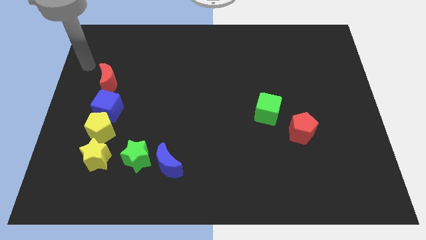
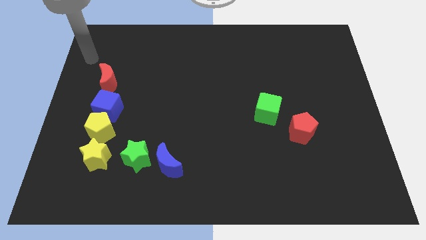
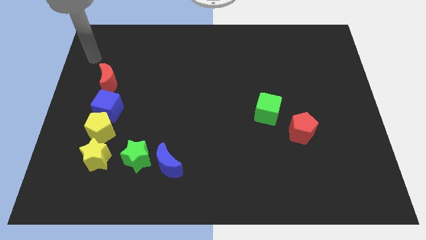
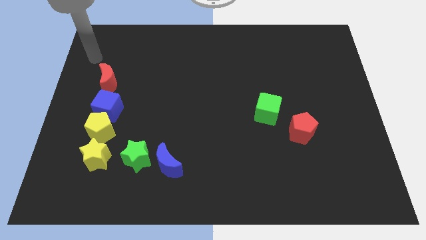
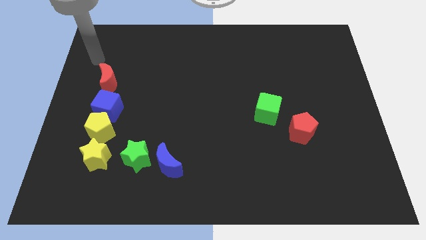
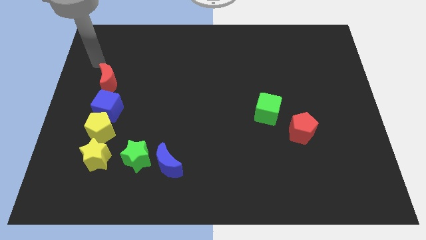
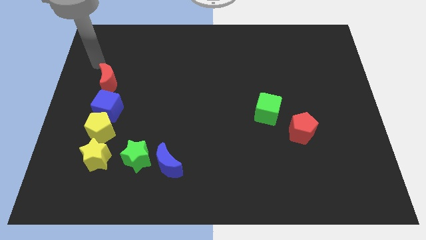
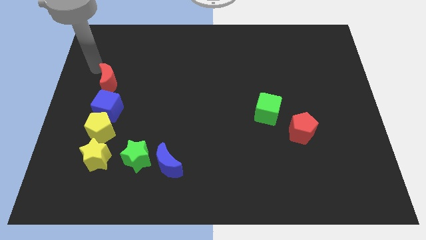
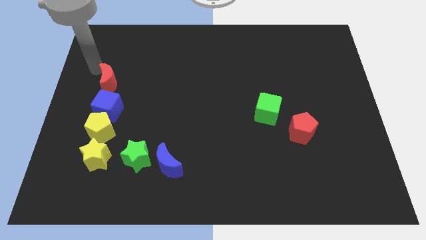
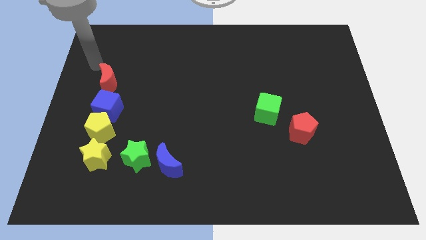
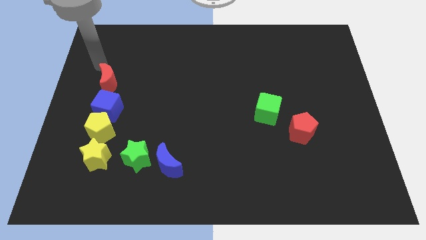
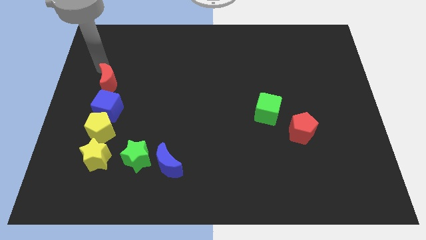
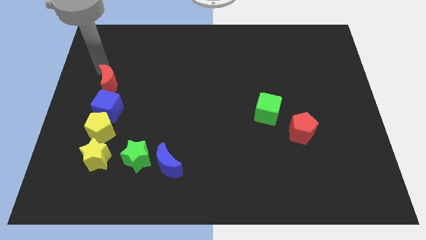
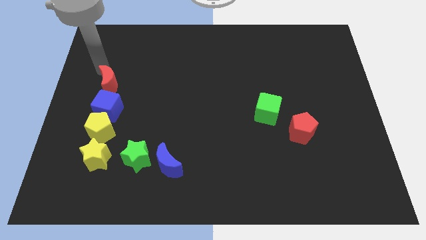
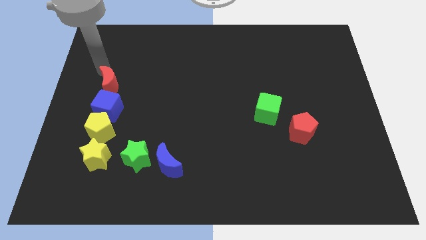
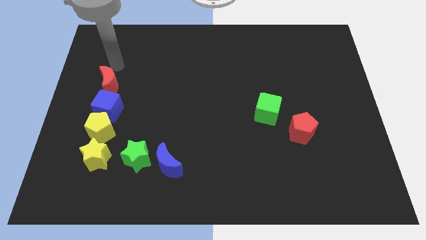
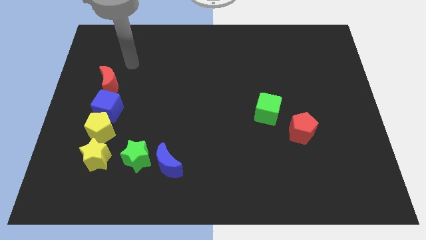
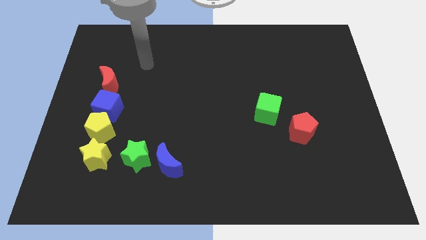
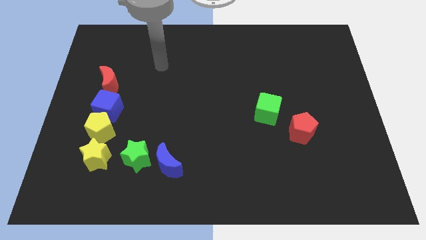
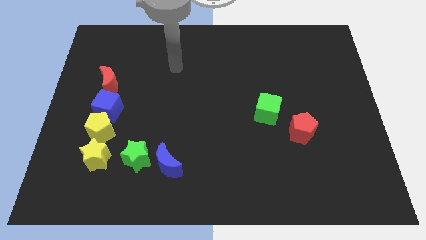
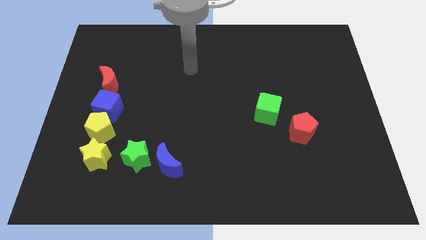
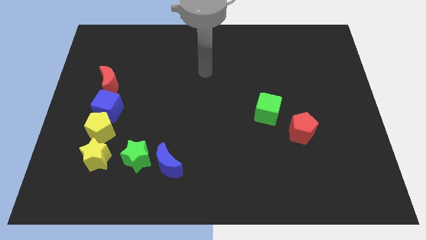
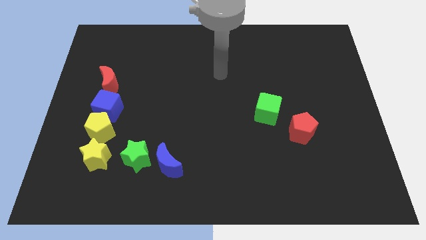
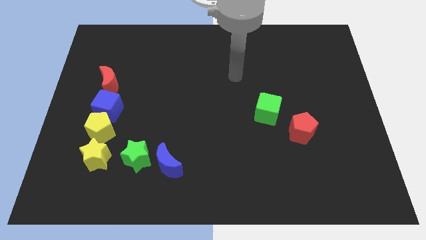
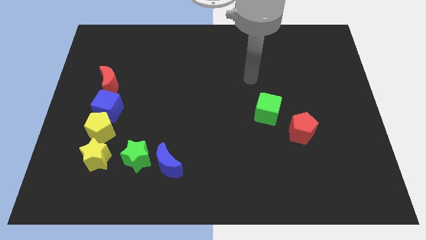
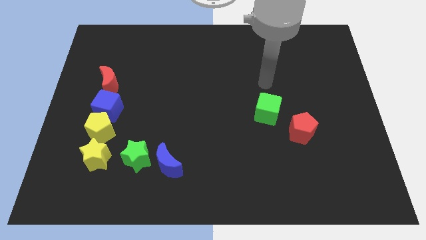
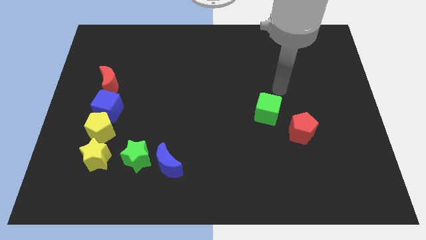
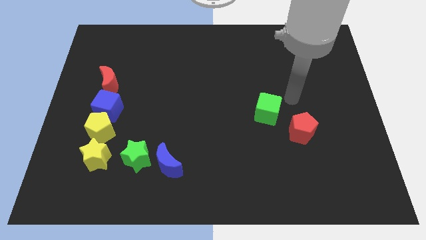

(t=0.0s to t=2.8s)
push red moon slightly into the blue cube

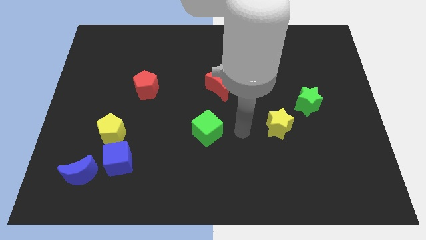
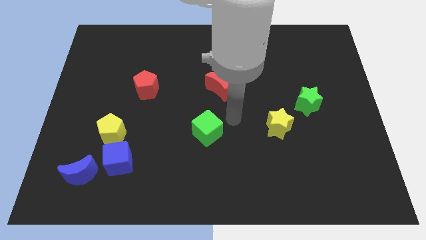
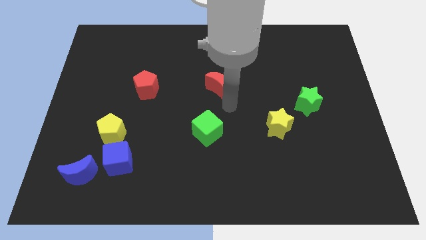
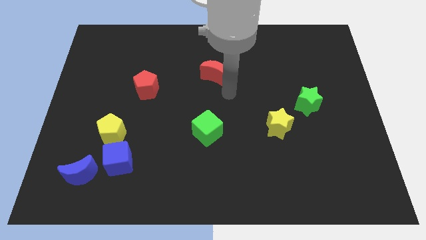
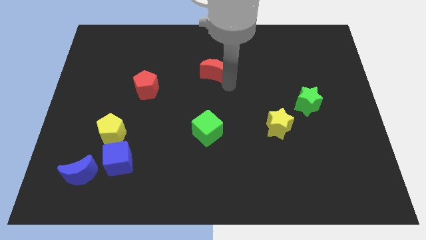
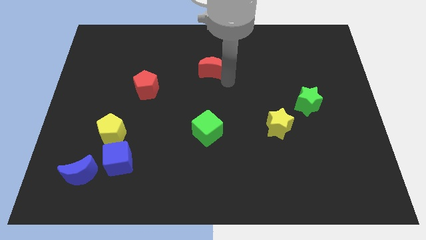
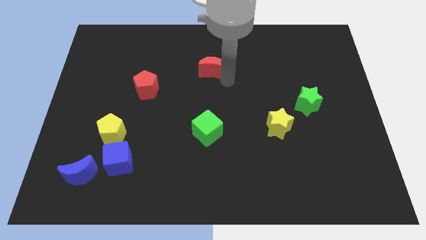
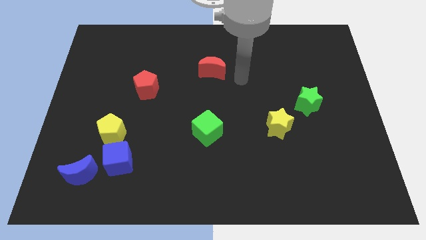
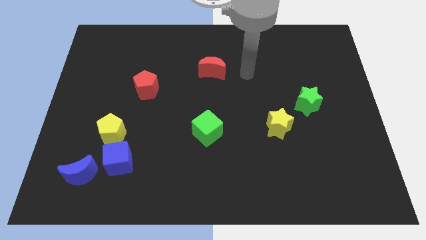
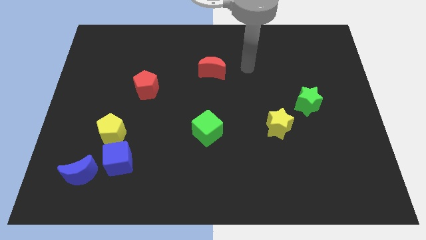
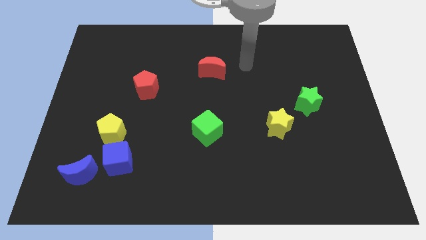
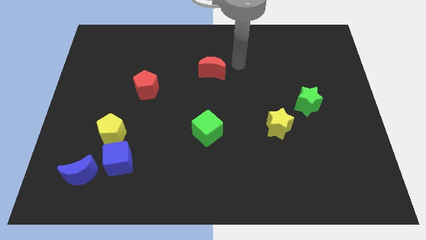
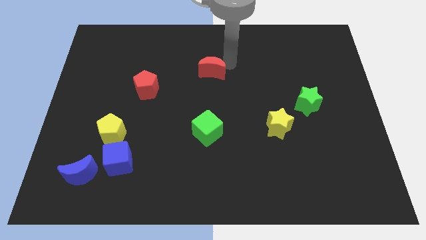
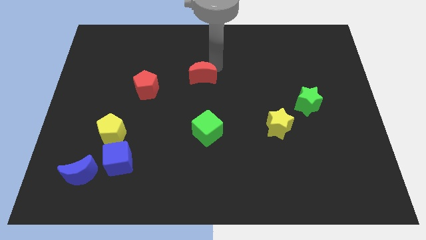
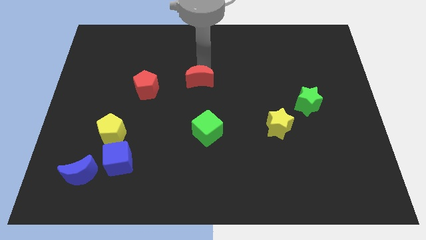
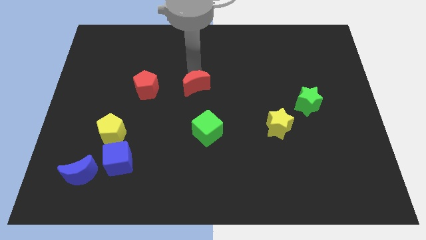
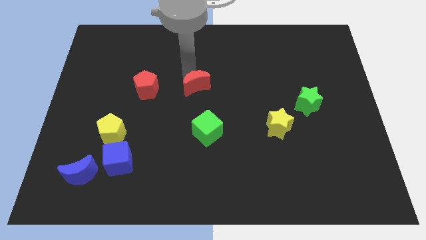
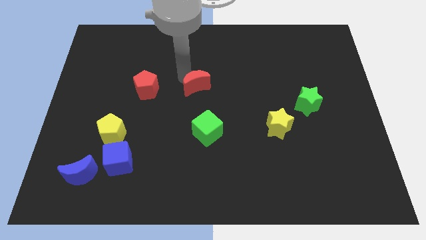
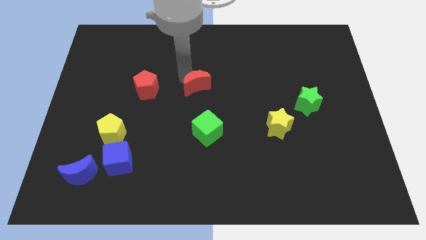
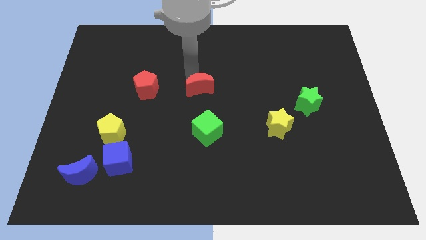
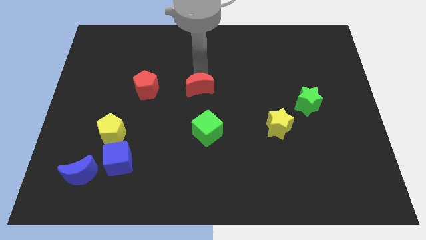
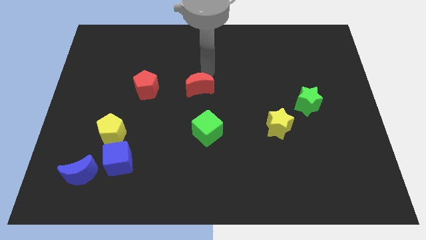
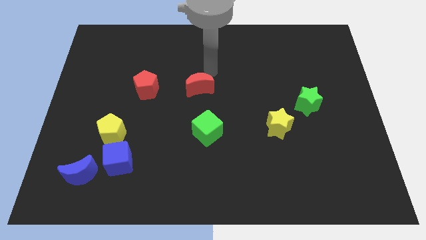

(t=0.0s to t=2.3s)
place the red crescent above the green cube

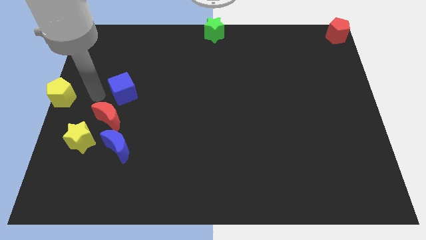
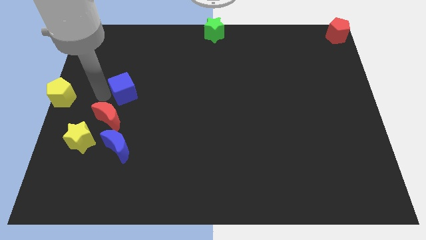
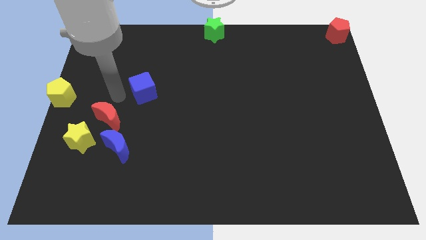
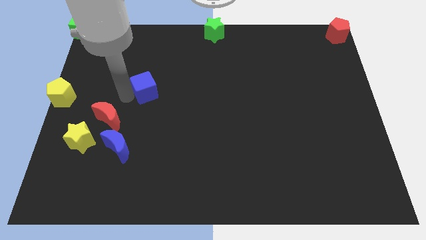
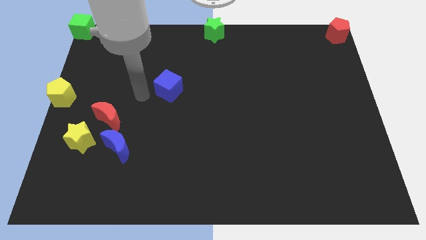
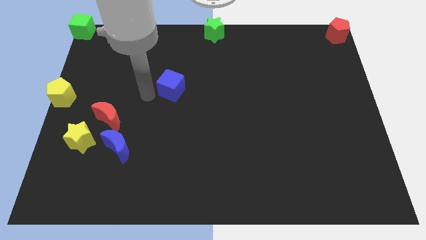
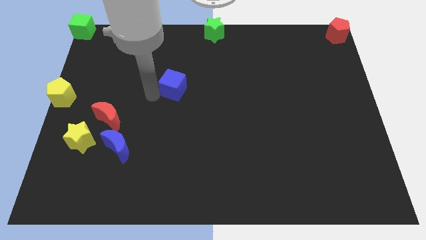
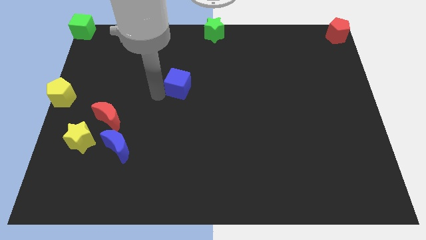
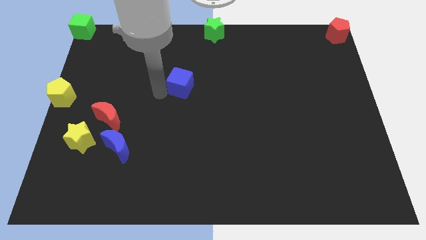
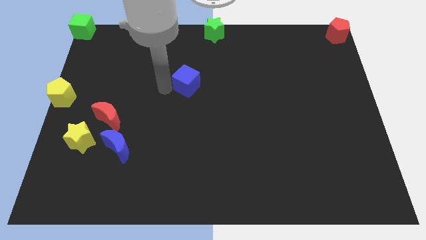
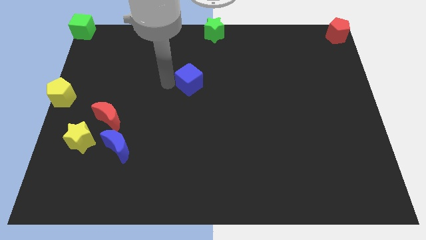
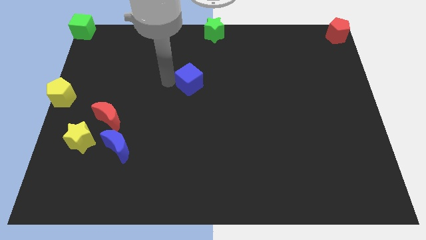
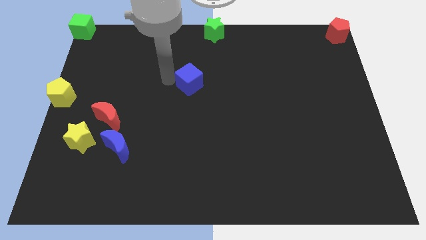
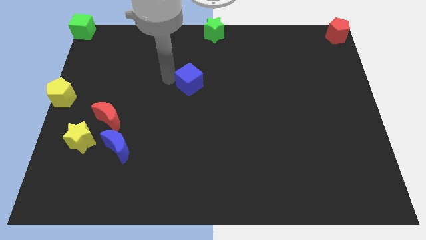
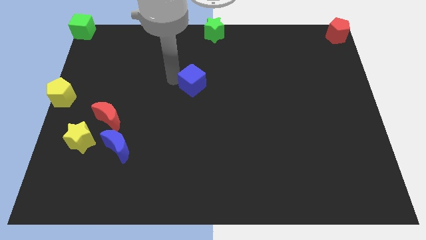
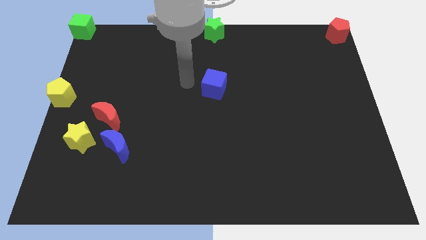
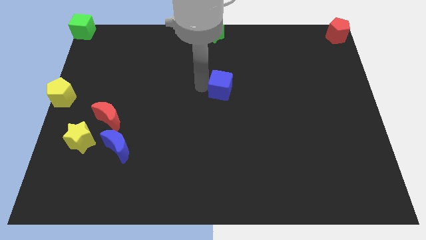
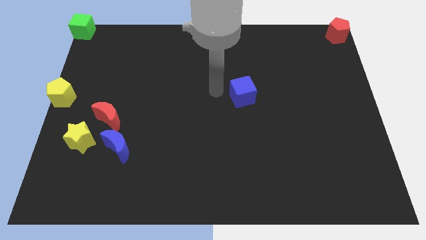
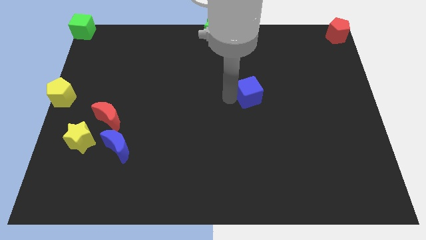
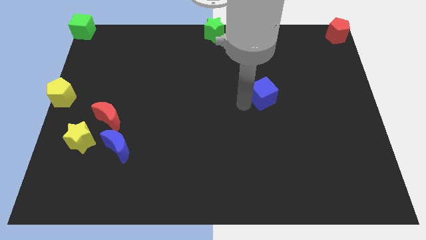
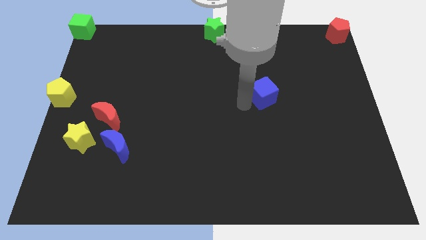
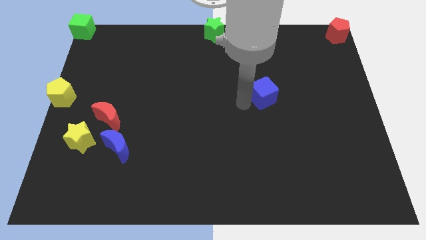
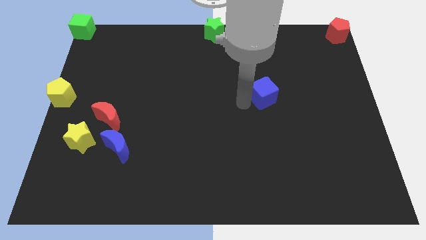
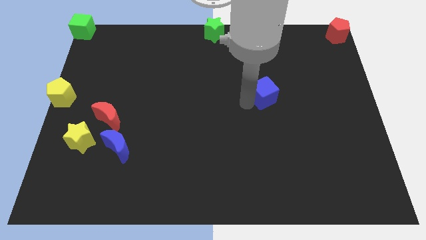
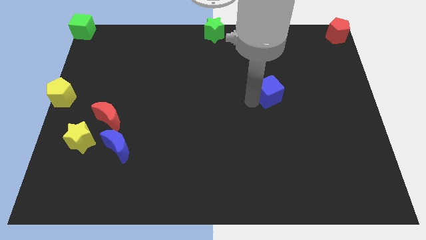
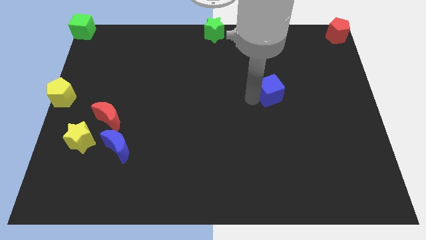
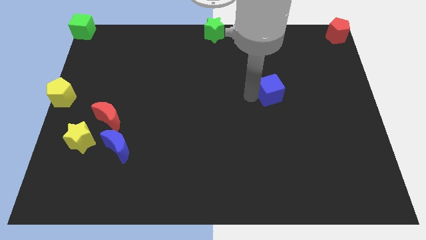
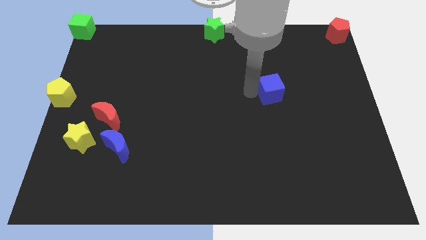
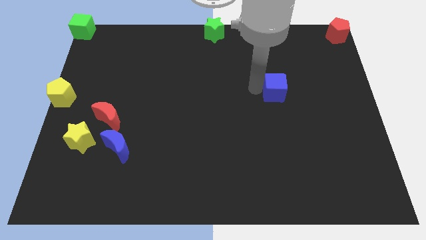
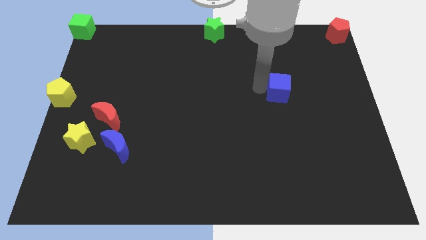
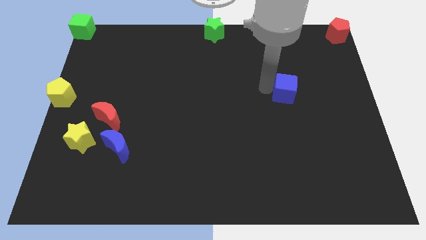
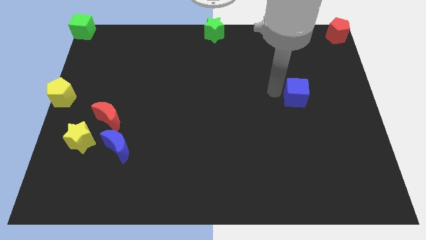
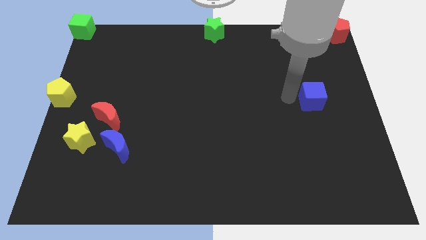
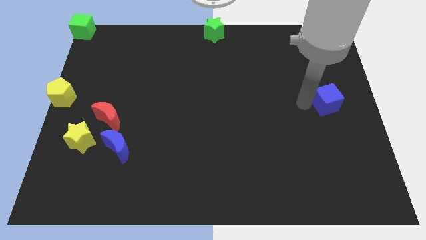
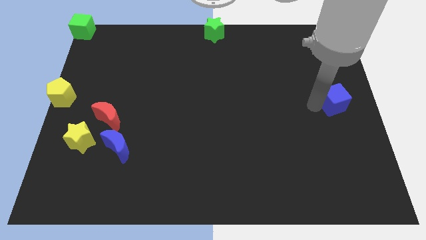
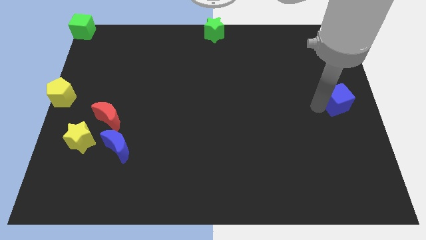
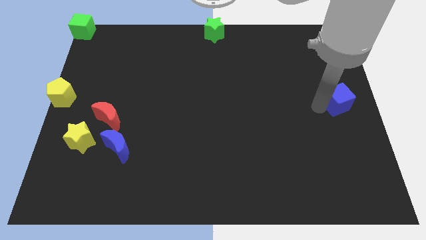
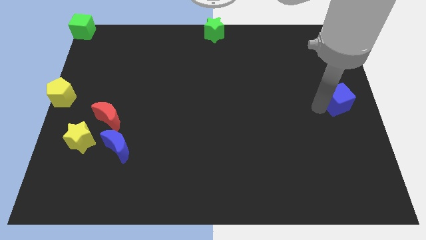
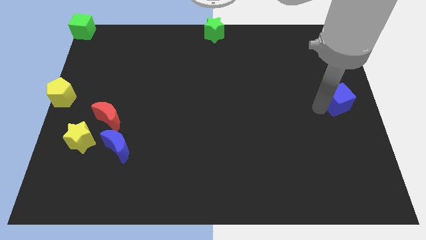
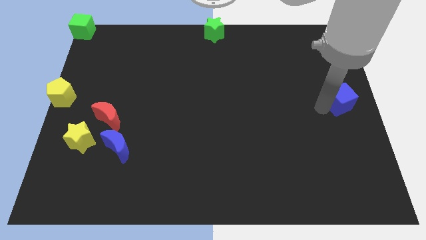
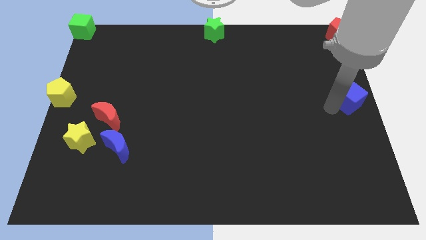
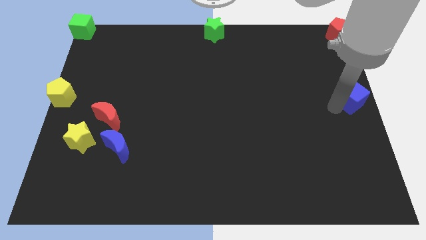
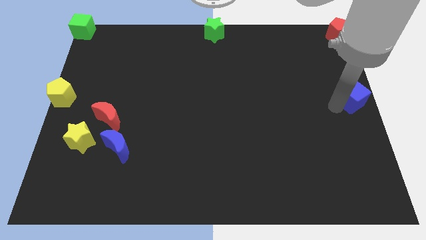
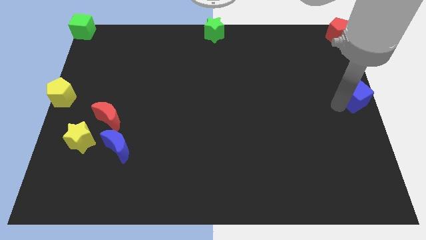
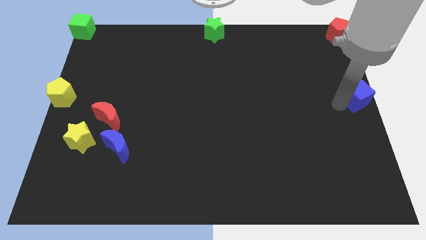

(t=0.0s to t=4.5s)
place the blue cube at right center of the board
